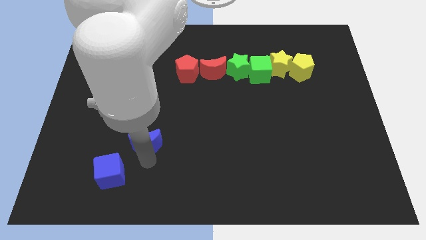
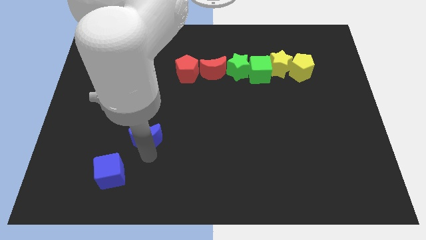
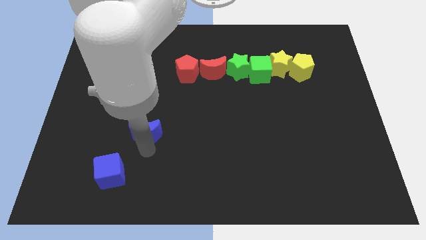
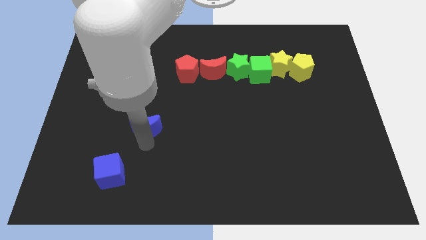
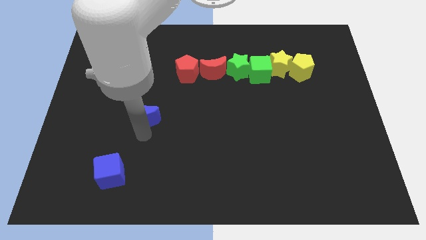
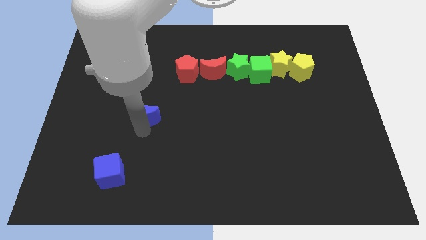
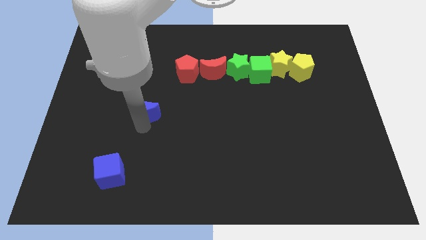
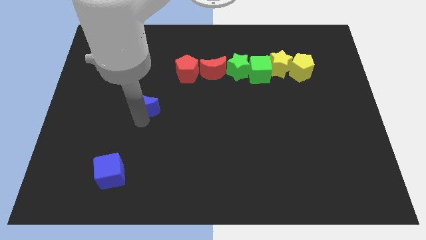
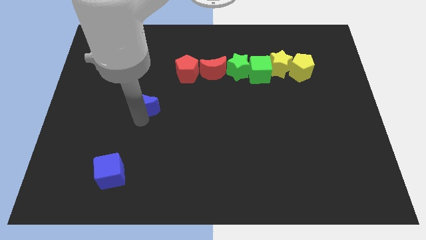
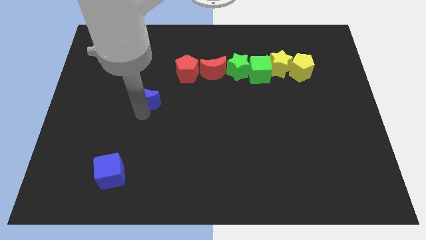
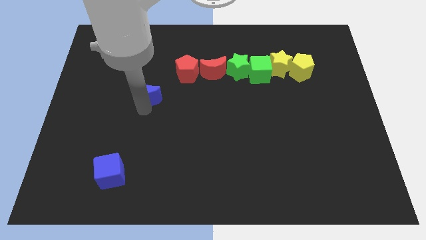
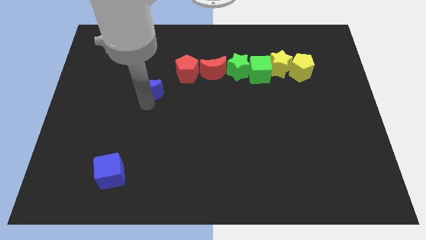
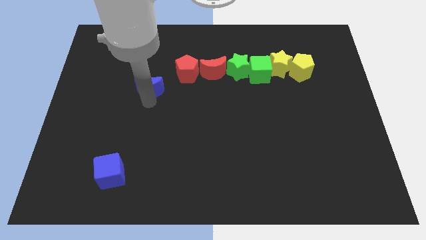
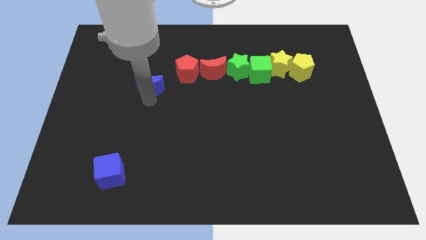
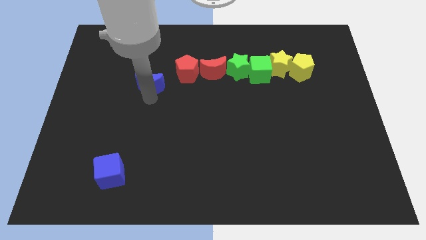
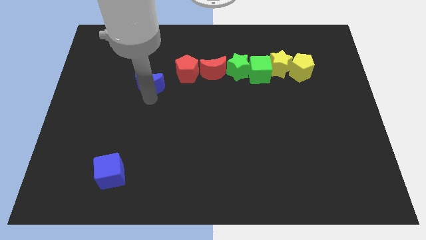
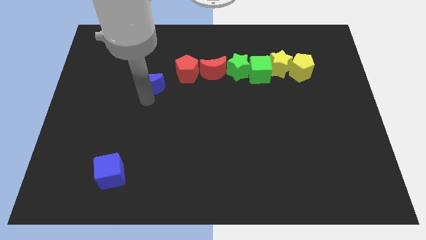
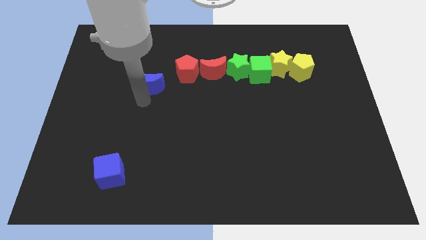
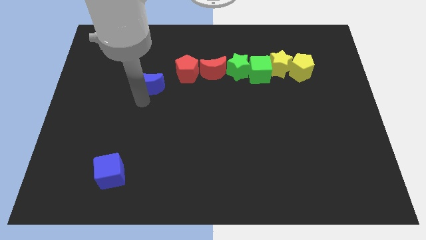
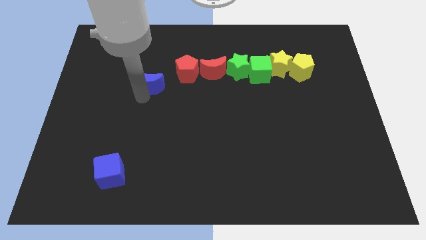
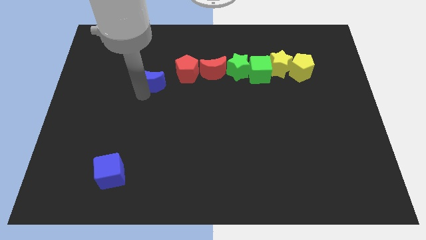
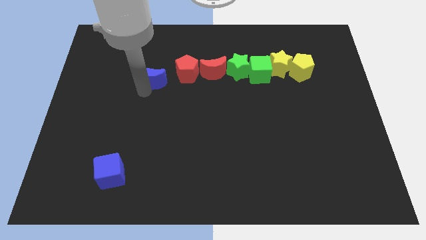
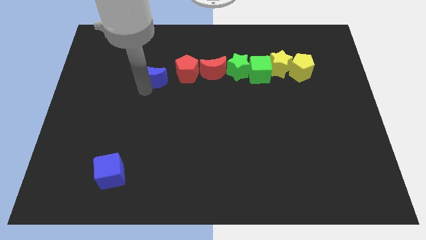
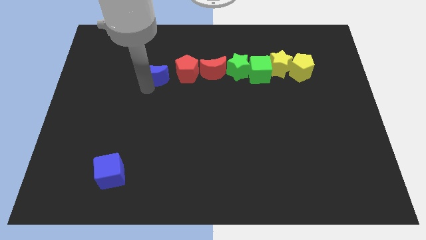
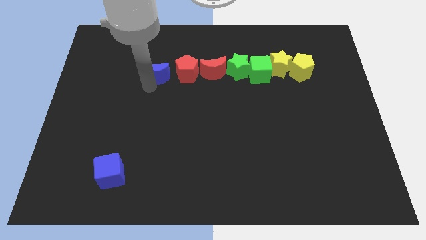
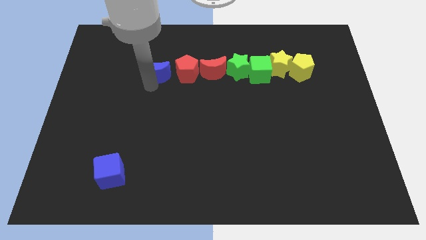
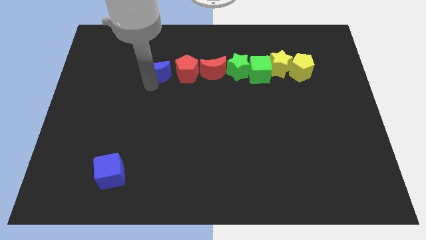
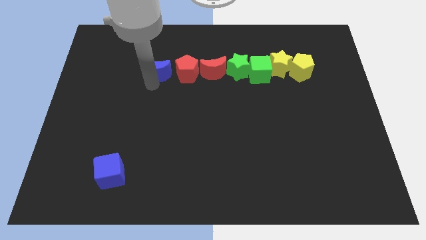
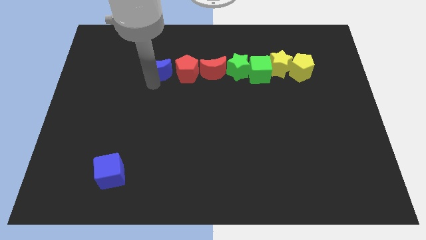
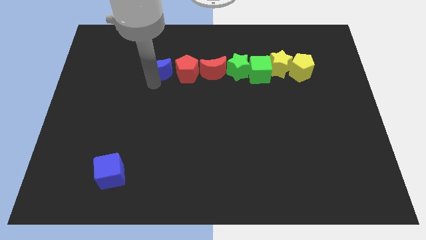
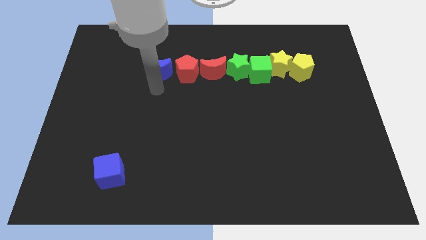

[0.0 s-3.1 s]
slide the blue crescent close to the left side of the red pentagon

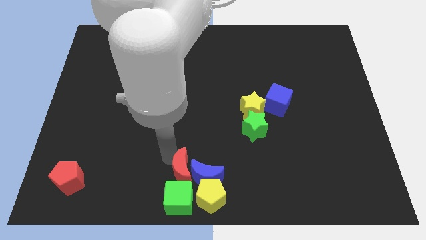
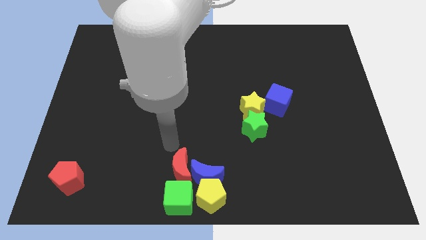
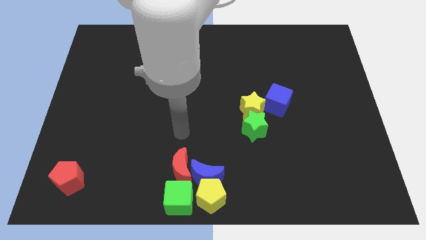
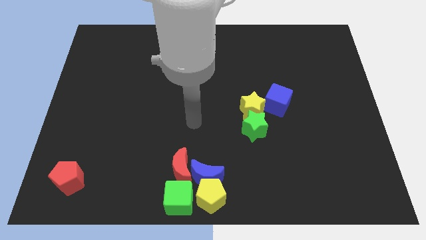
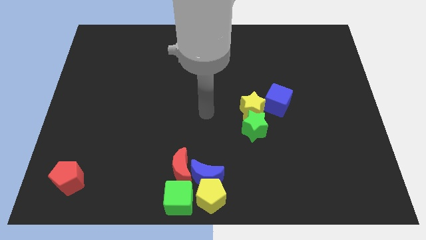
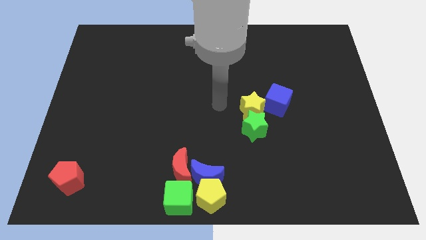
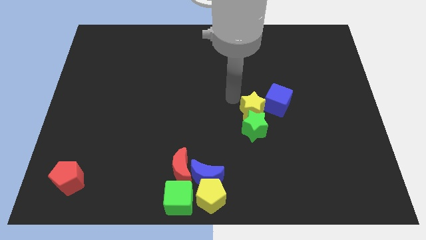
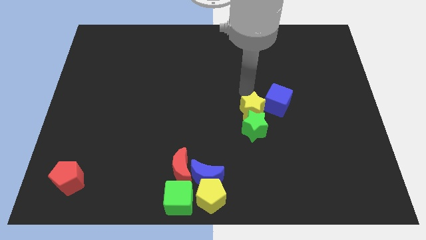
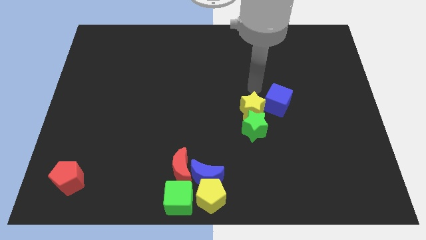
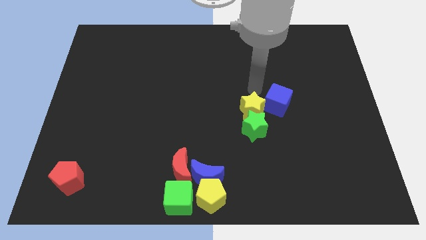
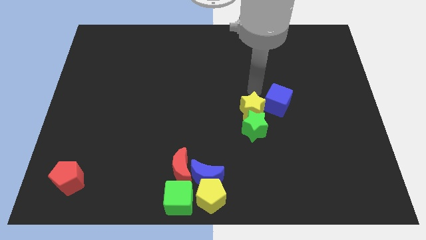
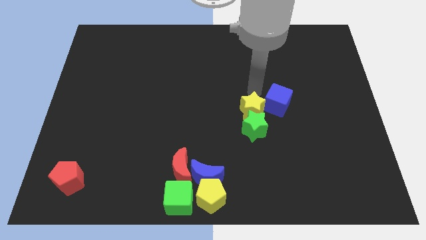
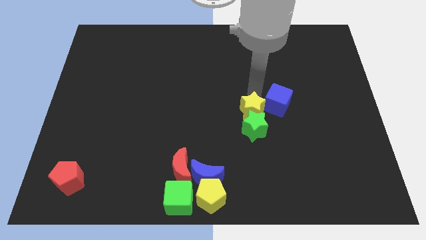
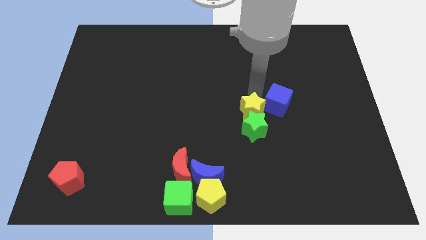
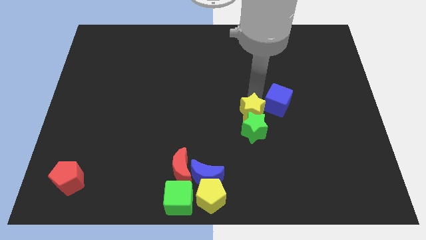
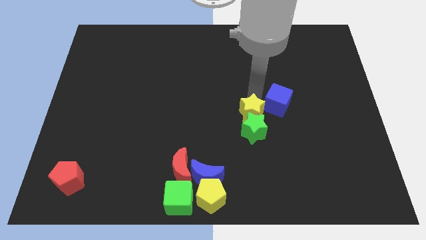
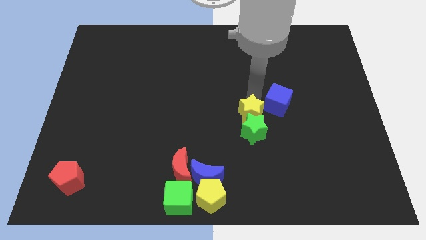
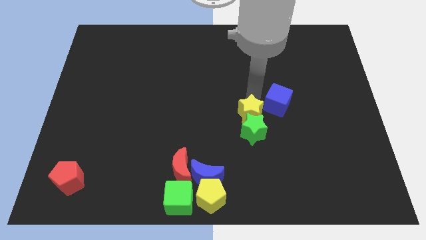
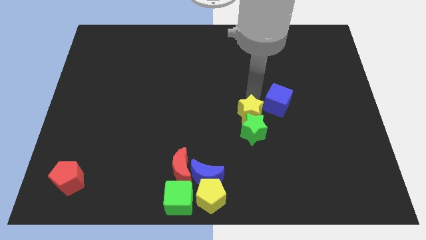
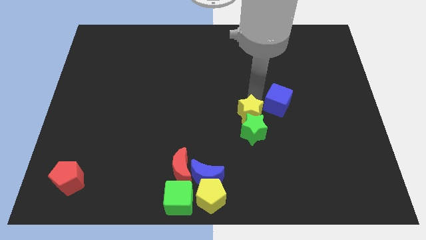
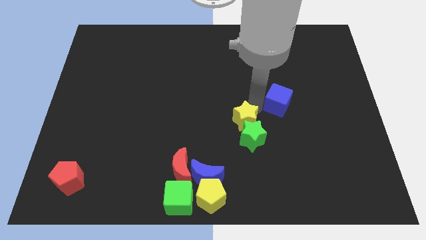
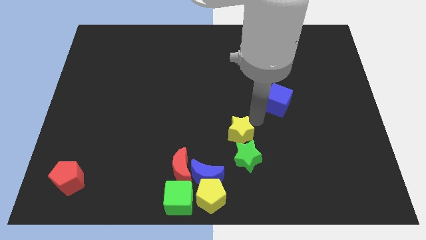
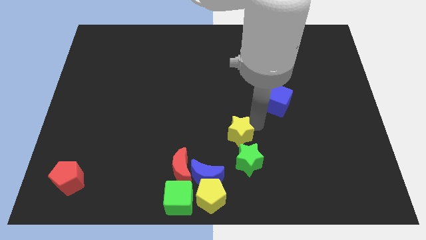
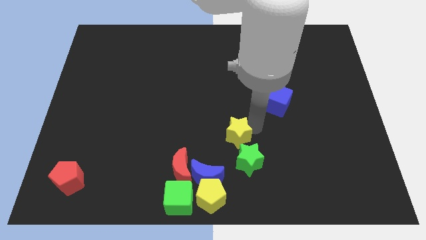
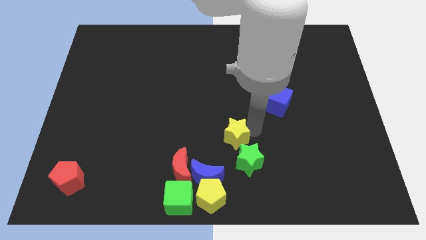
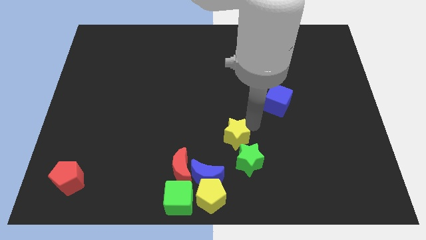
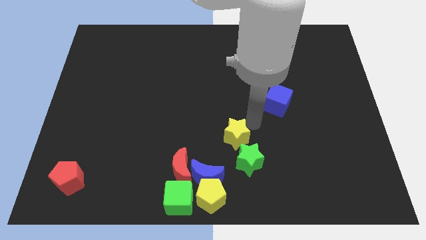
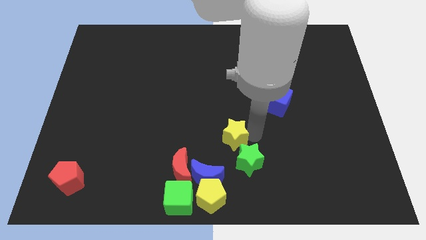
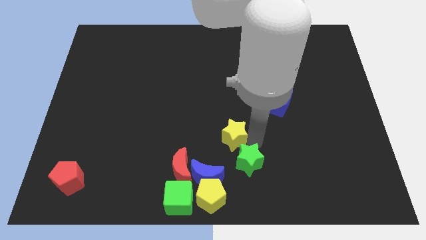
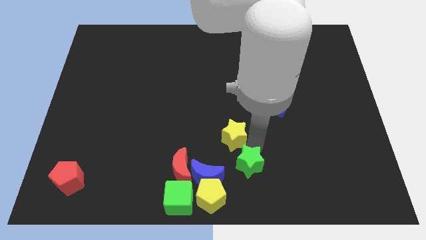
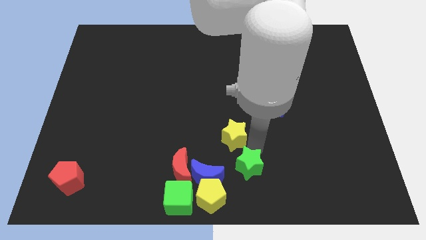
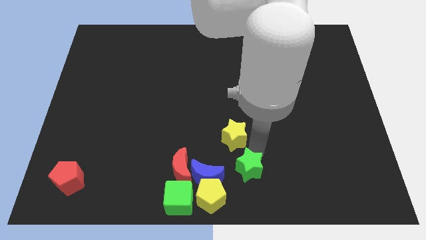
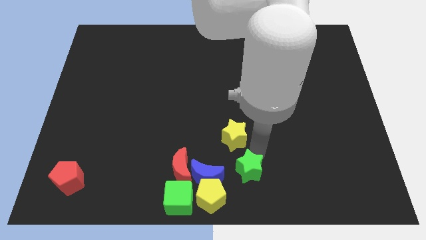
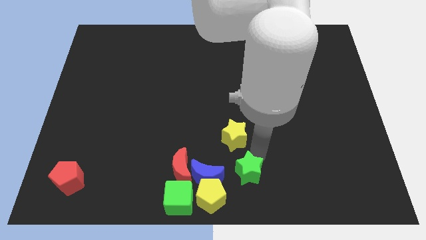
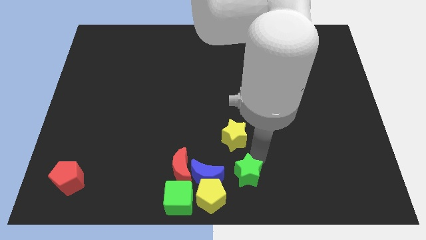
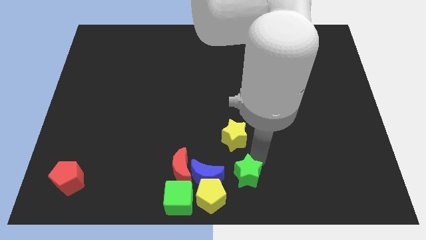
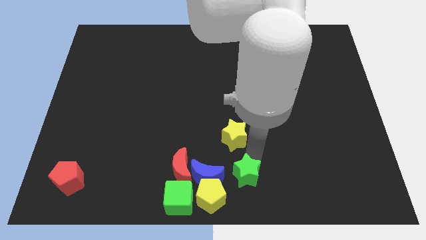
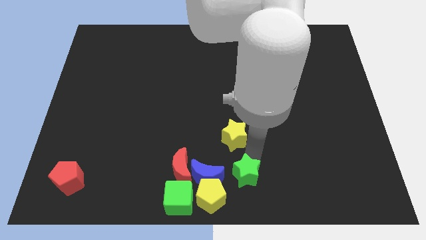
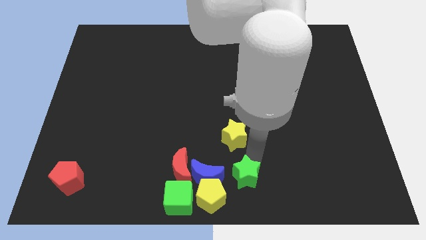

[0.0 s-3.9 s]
separate the yellow star and green star

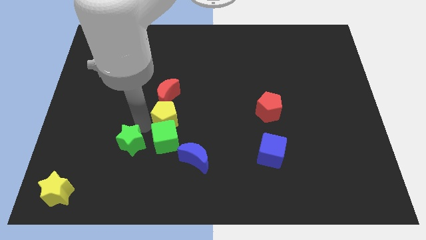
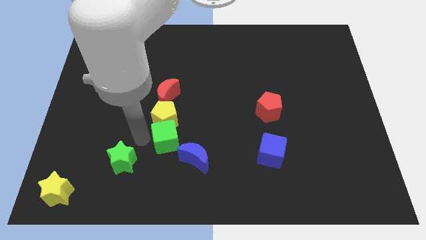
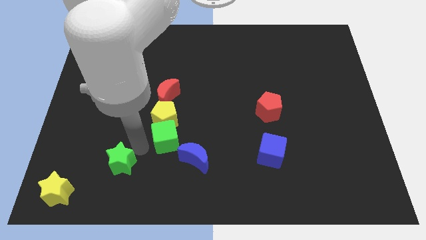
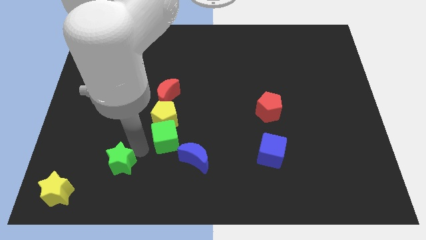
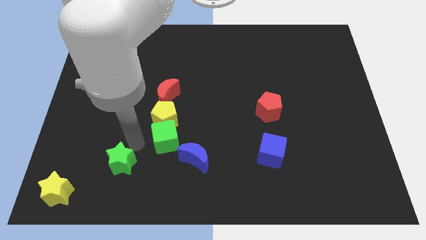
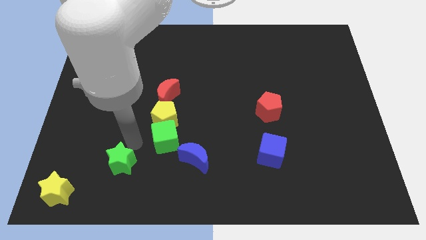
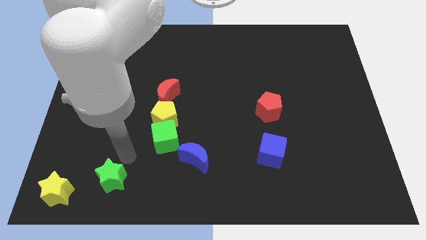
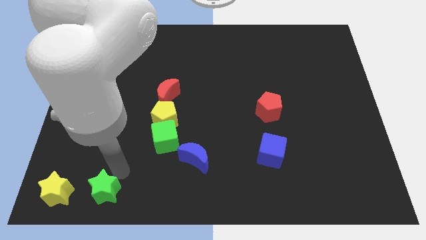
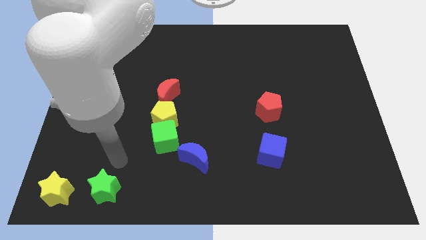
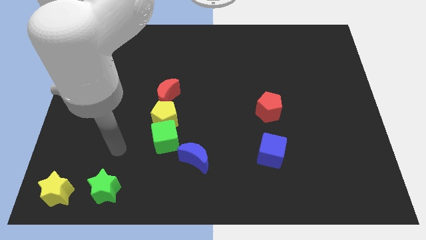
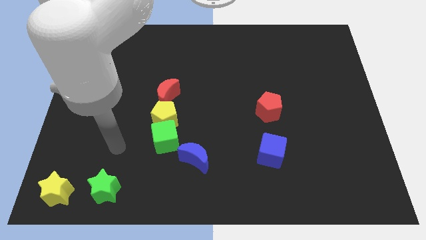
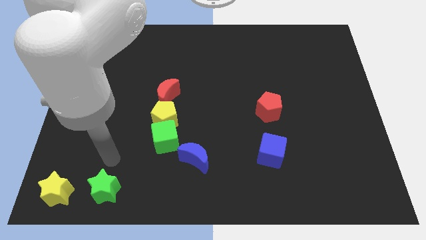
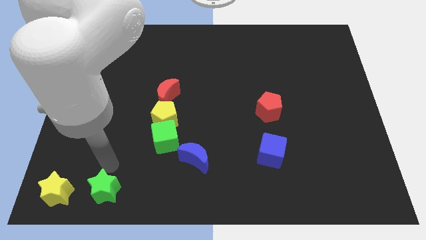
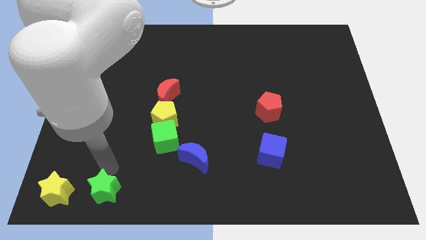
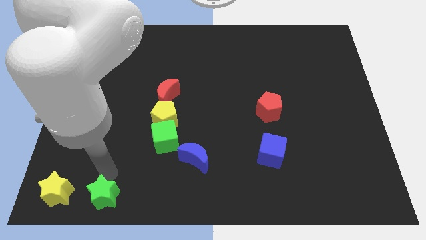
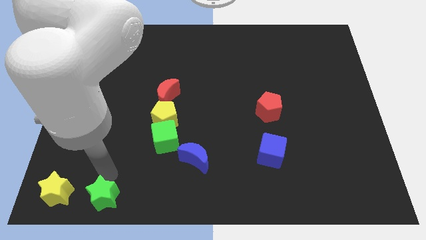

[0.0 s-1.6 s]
move the green star parallel to the right side of the yellow star

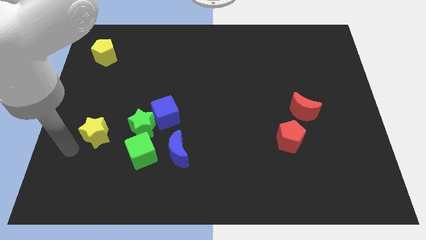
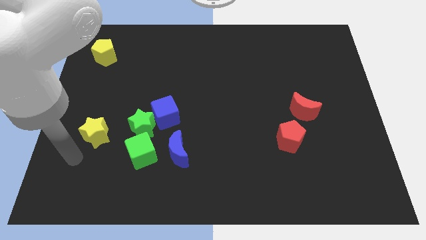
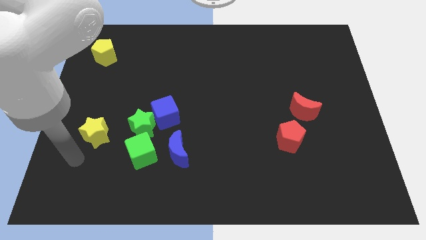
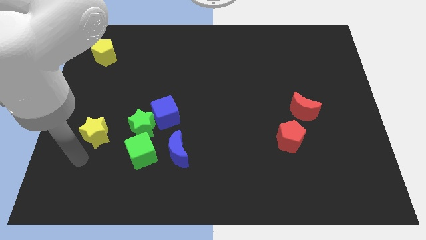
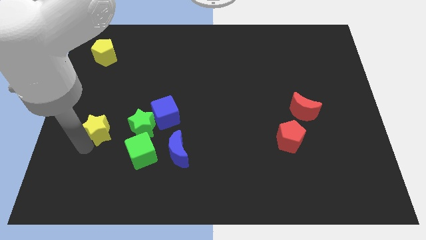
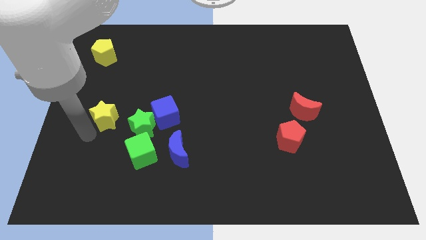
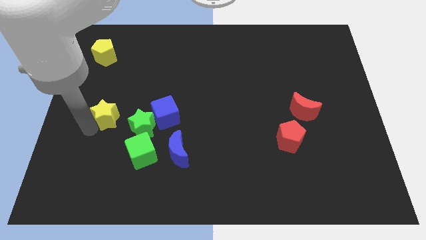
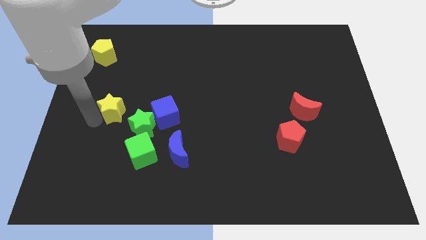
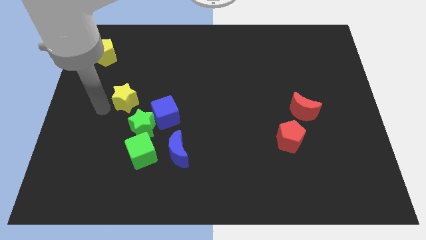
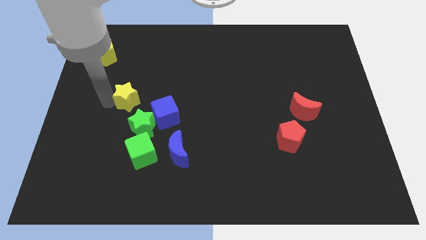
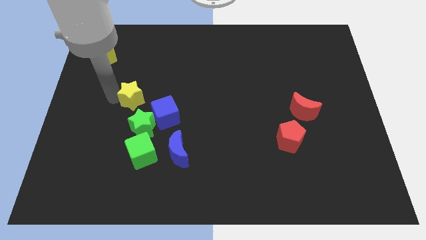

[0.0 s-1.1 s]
place the yellow star above the green star
